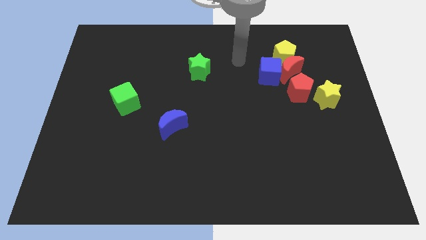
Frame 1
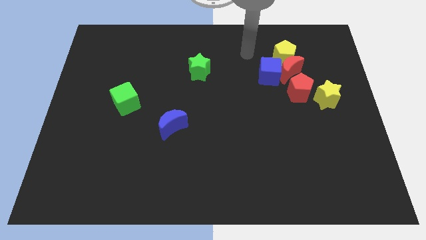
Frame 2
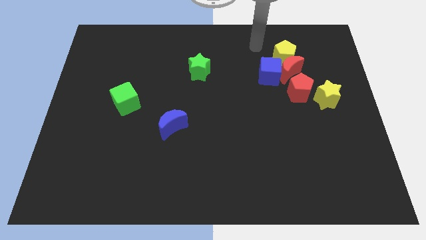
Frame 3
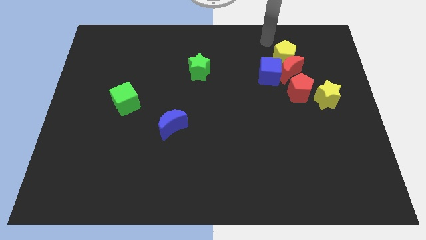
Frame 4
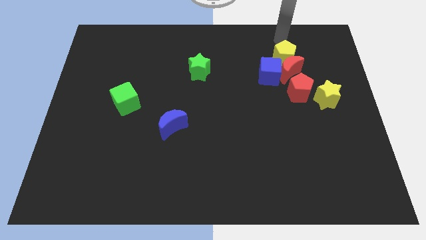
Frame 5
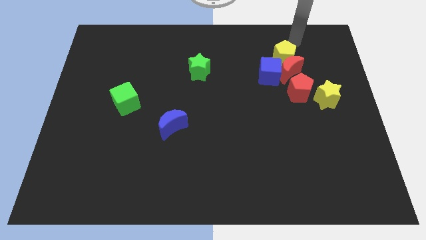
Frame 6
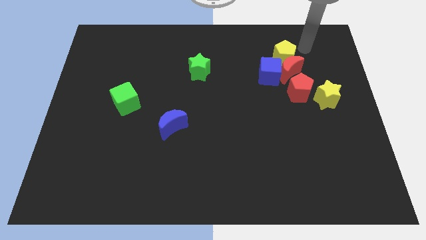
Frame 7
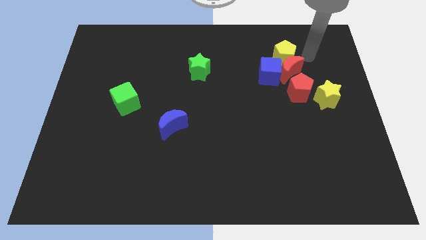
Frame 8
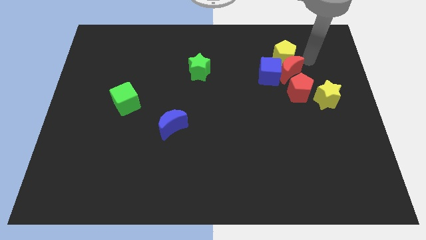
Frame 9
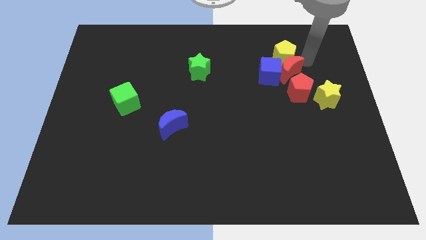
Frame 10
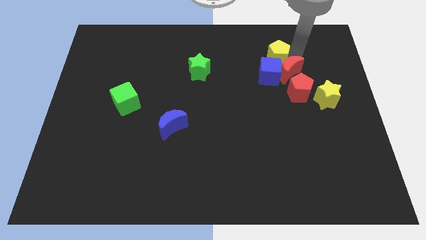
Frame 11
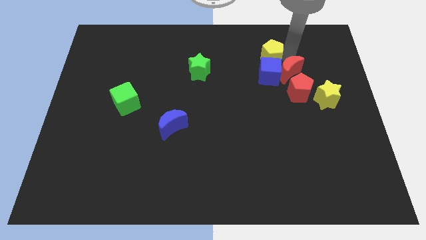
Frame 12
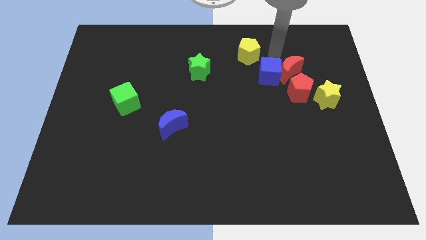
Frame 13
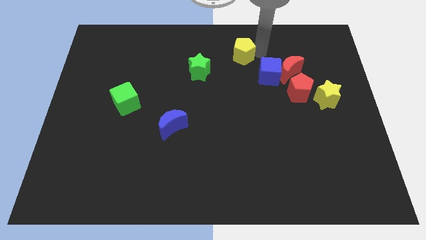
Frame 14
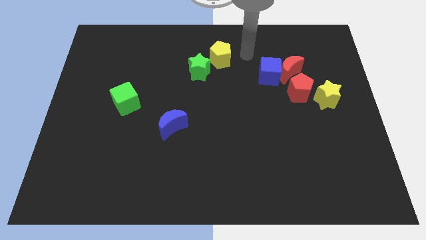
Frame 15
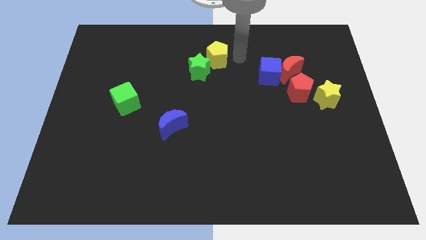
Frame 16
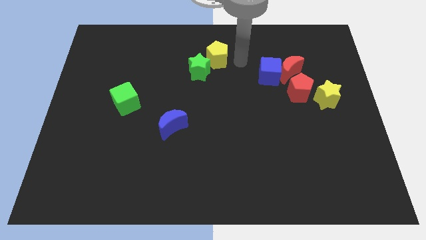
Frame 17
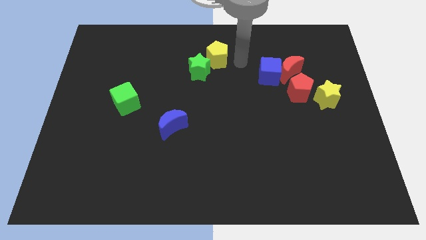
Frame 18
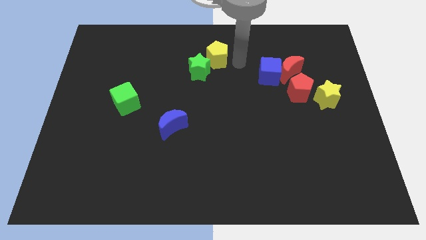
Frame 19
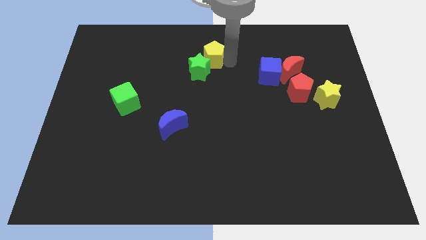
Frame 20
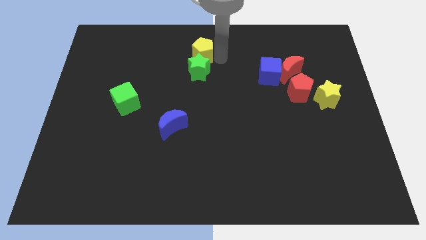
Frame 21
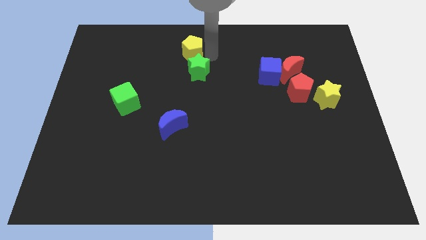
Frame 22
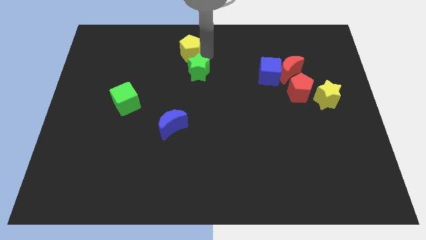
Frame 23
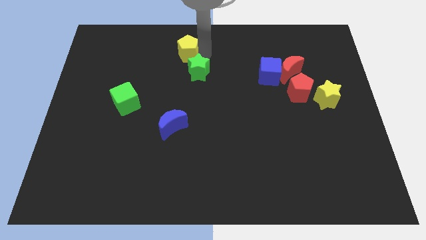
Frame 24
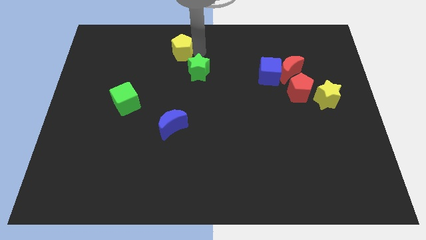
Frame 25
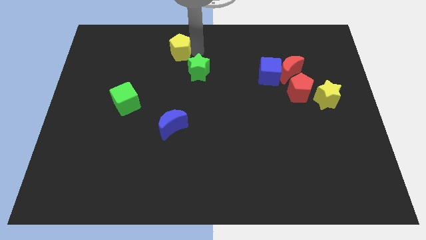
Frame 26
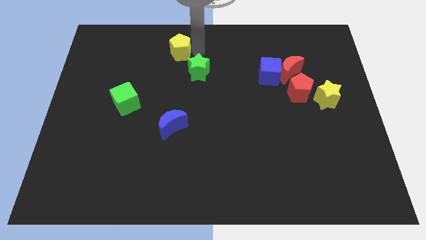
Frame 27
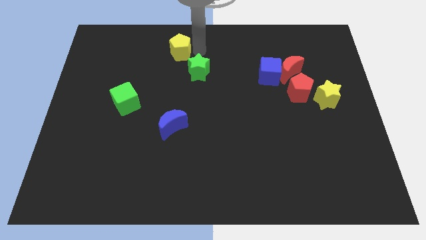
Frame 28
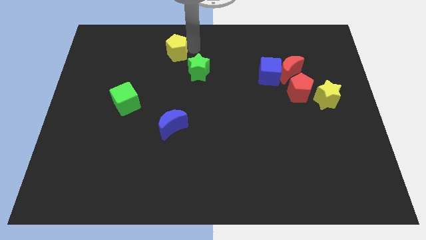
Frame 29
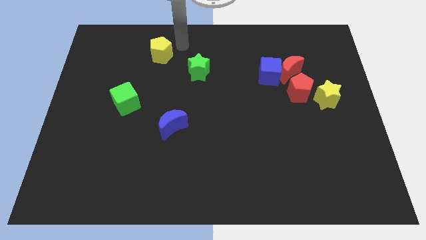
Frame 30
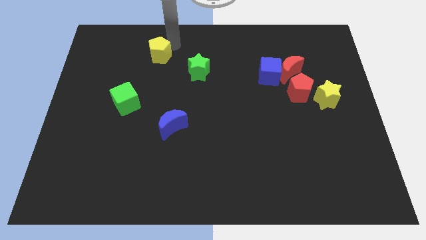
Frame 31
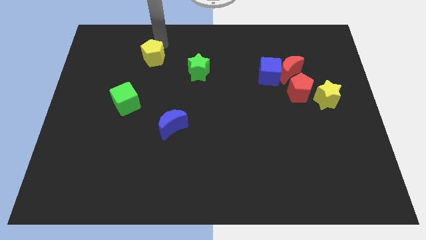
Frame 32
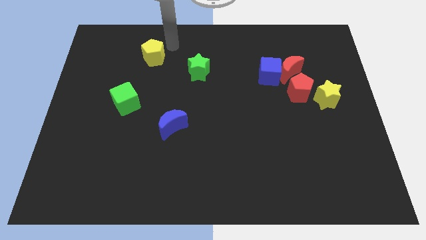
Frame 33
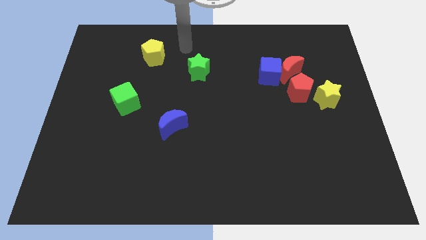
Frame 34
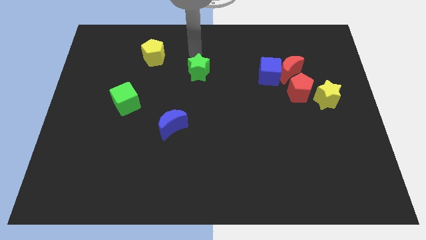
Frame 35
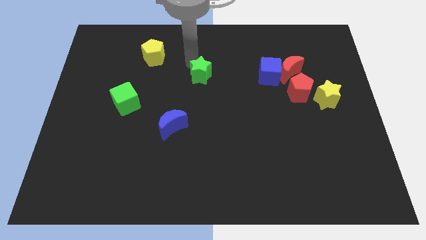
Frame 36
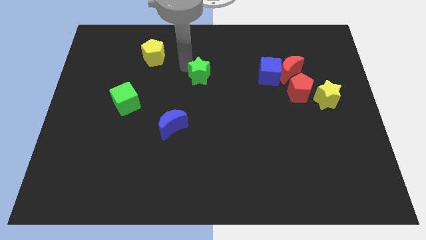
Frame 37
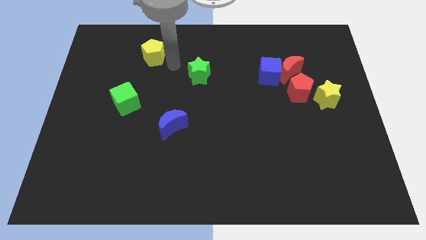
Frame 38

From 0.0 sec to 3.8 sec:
separate the yellow pentagon from the group of blocks

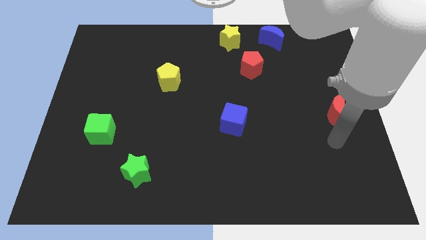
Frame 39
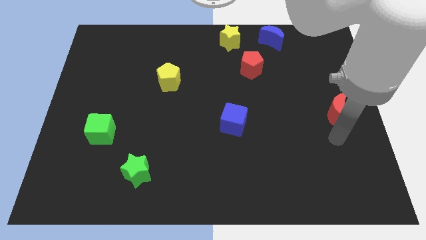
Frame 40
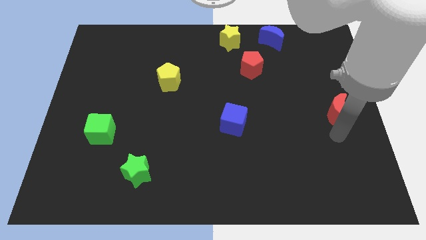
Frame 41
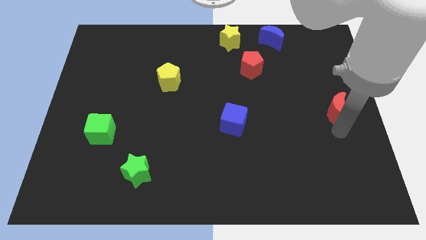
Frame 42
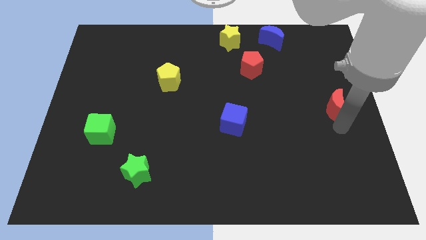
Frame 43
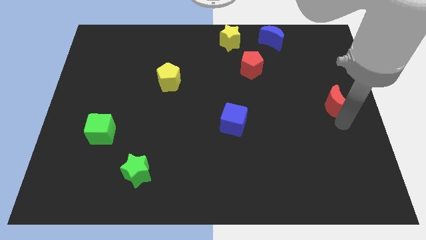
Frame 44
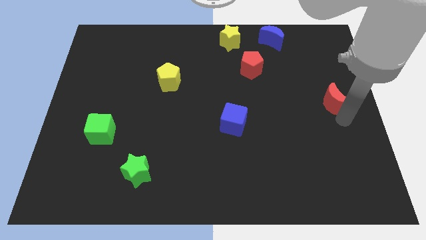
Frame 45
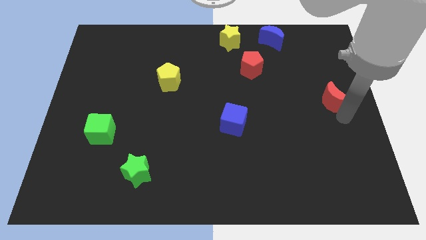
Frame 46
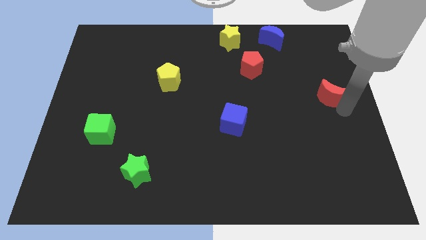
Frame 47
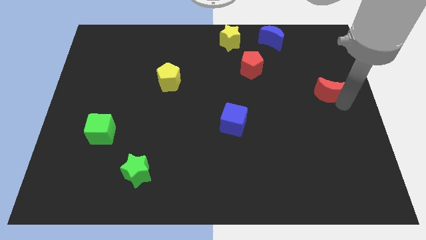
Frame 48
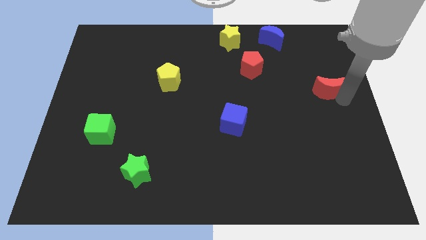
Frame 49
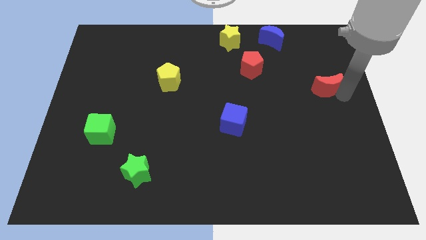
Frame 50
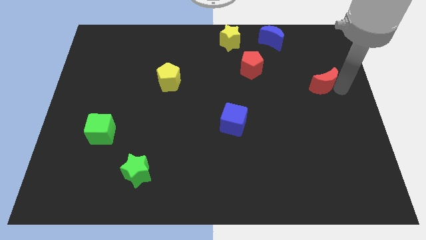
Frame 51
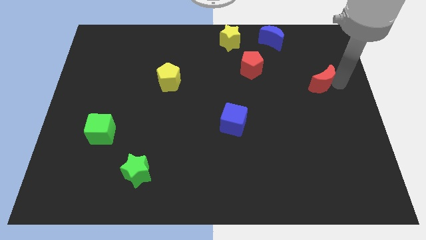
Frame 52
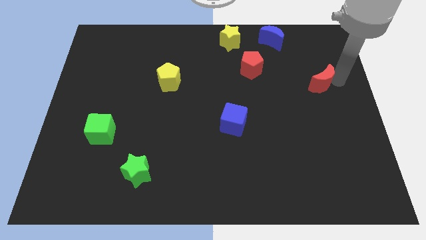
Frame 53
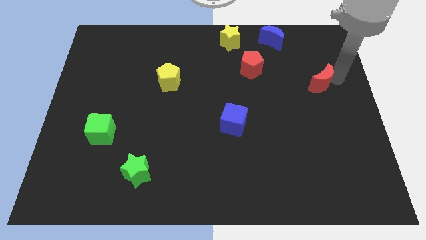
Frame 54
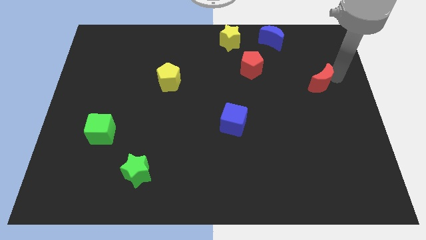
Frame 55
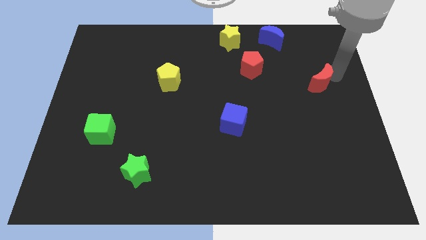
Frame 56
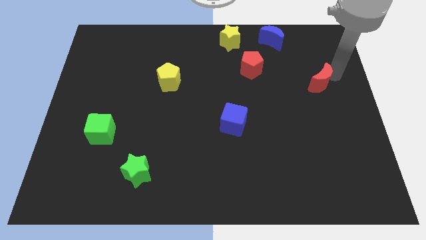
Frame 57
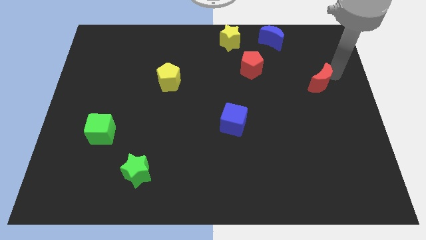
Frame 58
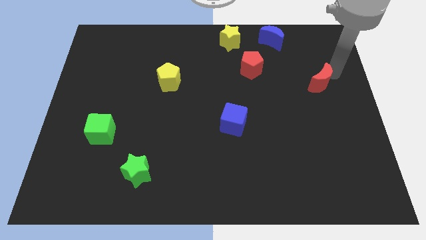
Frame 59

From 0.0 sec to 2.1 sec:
move the red crescent up slightly

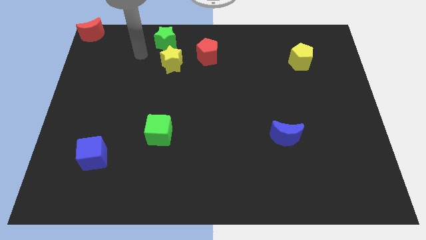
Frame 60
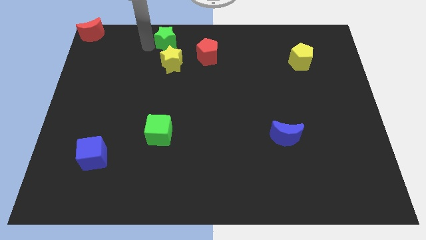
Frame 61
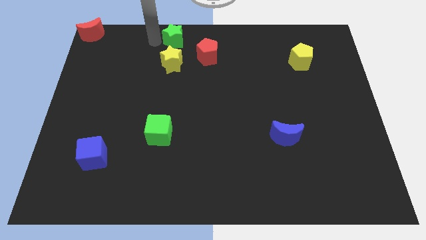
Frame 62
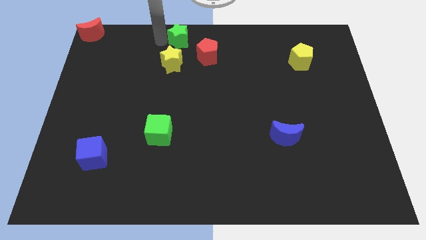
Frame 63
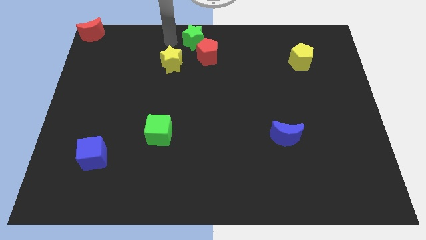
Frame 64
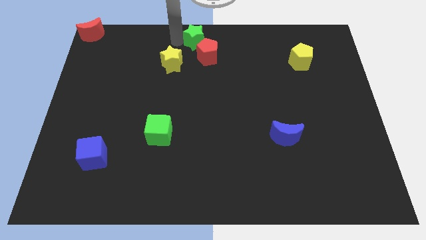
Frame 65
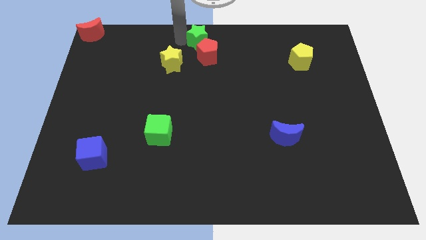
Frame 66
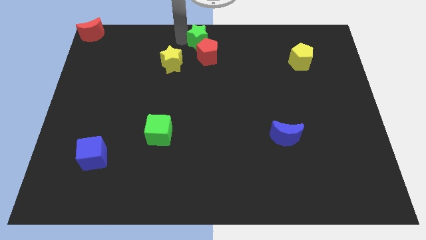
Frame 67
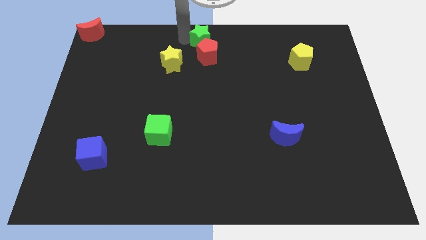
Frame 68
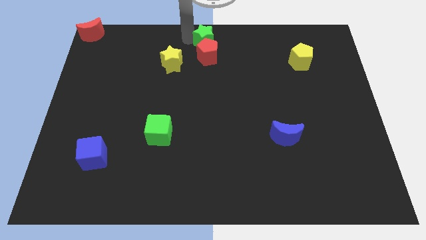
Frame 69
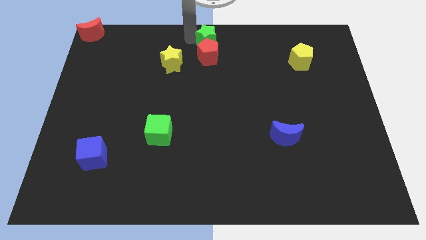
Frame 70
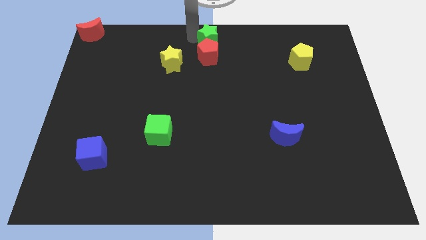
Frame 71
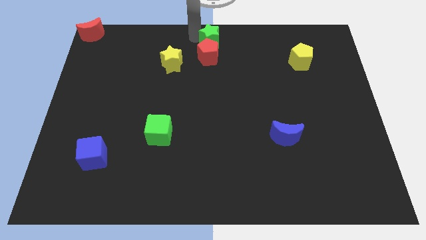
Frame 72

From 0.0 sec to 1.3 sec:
place the green star above the red pentagon

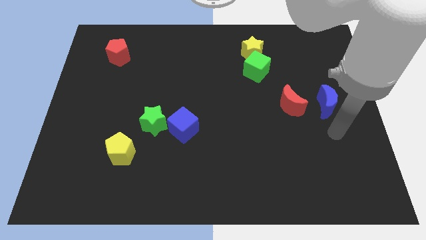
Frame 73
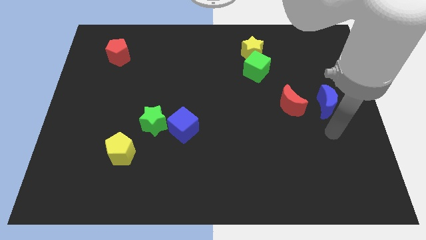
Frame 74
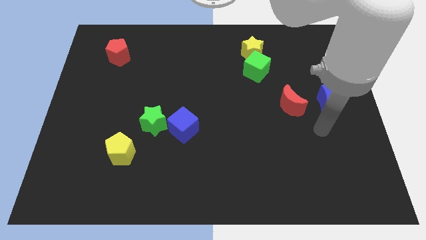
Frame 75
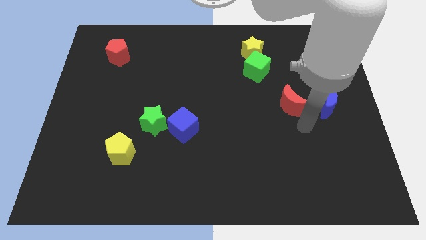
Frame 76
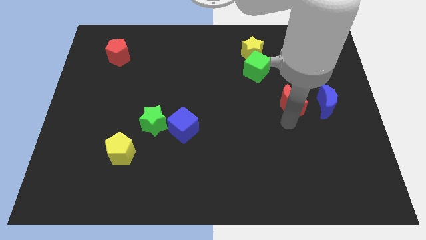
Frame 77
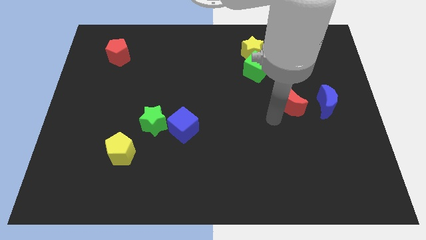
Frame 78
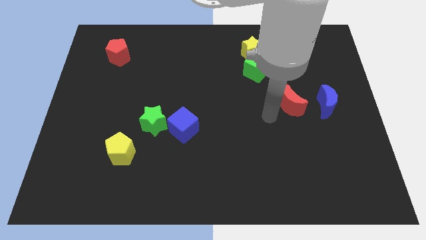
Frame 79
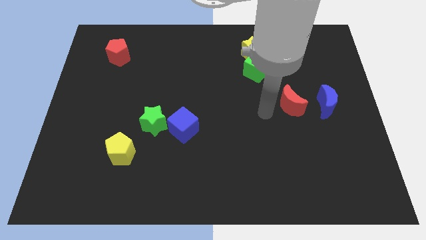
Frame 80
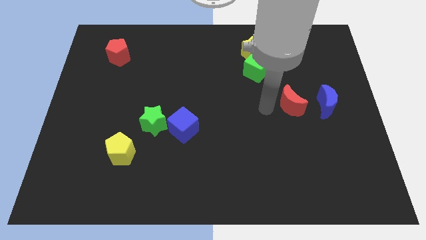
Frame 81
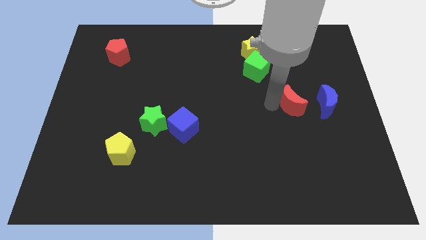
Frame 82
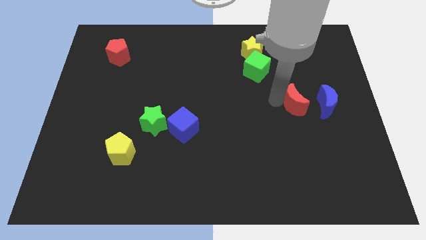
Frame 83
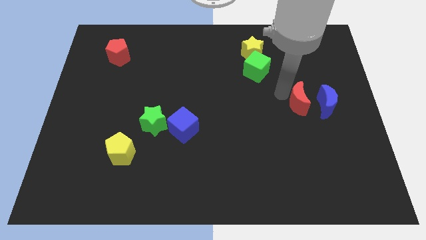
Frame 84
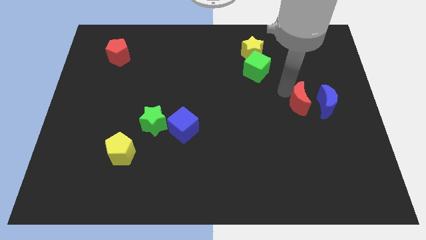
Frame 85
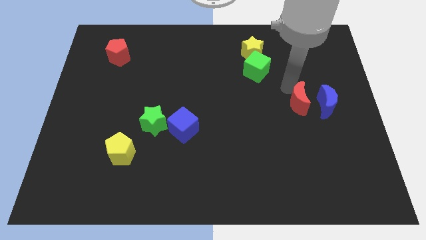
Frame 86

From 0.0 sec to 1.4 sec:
slightly move the red crescent to the left of the blue crescent

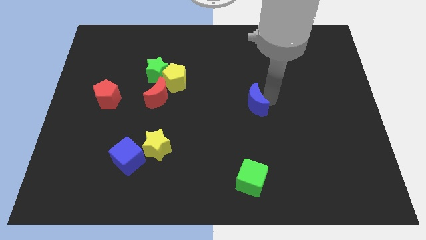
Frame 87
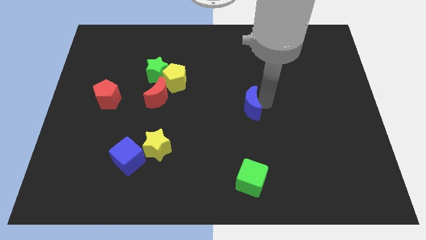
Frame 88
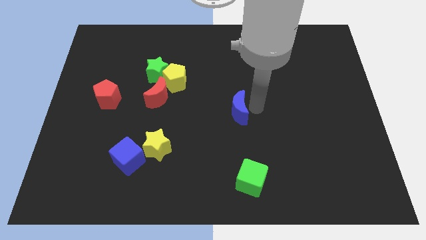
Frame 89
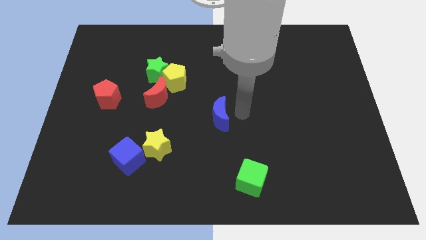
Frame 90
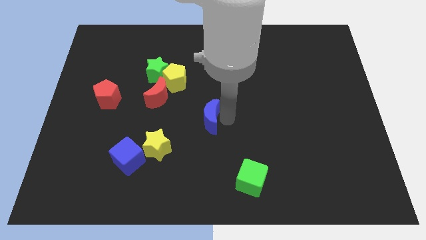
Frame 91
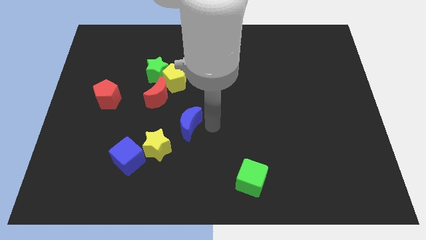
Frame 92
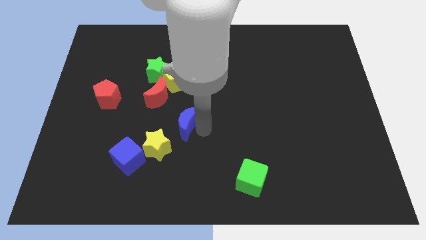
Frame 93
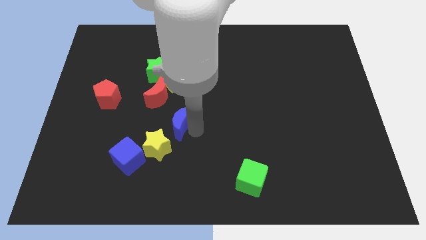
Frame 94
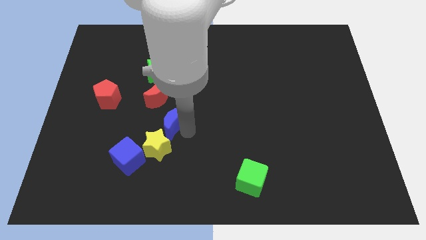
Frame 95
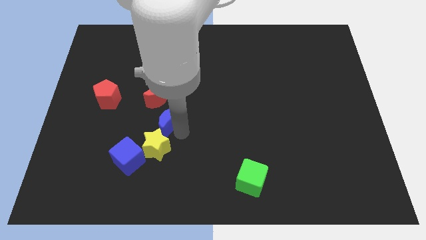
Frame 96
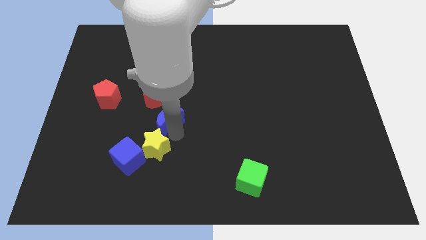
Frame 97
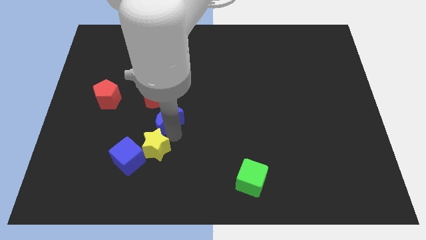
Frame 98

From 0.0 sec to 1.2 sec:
push the blue crescent slightly towards the yellow star
